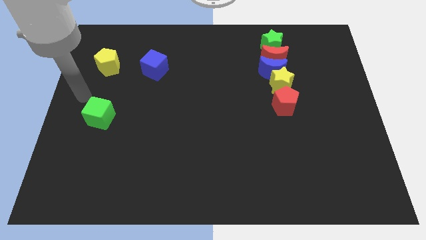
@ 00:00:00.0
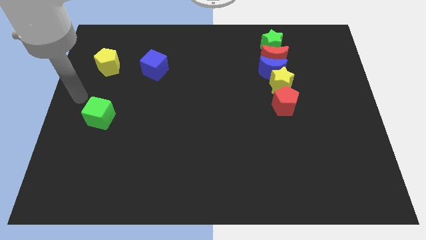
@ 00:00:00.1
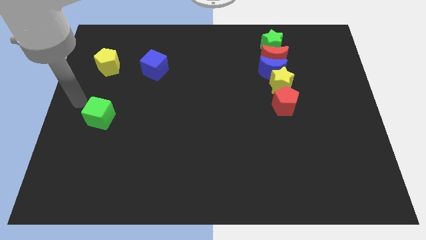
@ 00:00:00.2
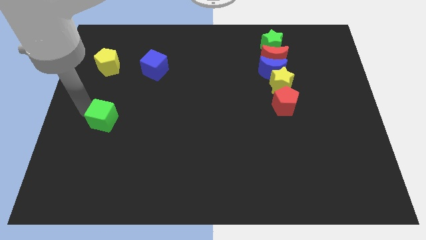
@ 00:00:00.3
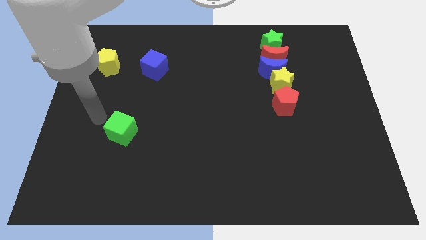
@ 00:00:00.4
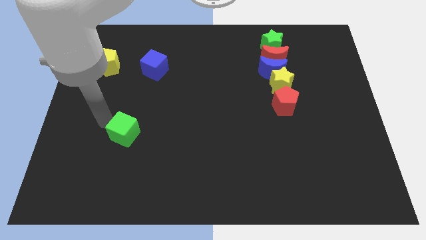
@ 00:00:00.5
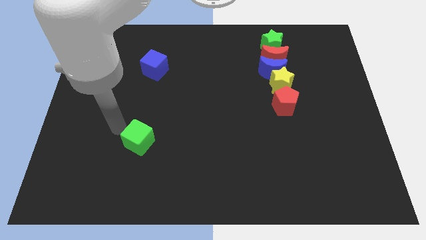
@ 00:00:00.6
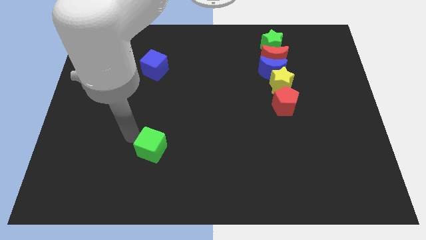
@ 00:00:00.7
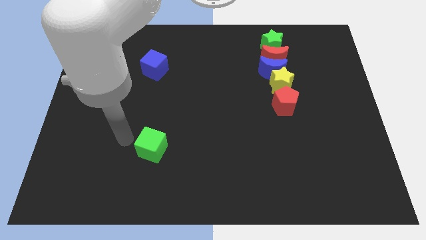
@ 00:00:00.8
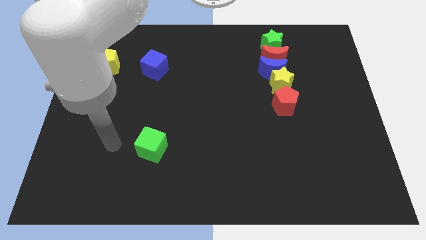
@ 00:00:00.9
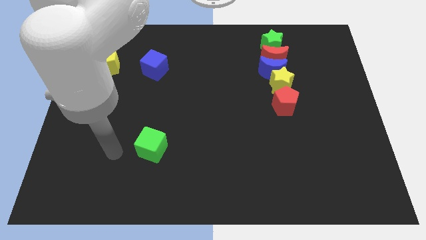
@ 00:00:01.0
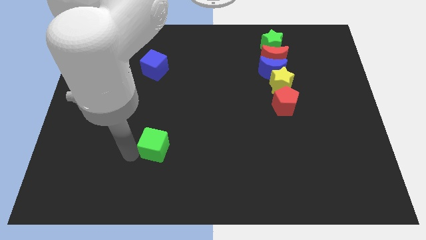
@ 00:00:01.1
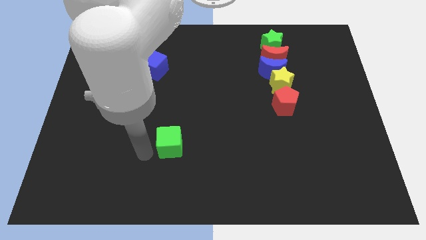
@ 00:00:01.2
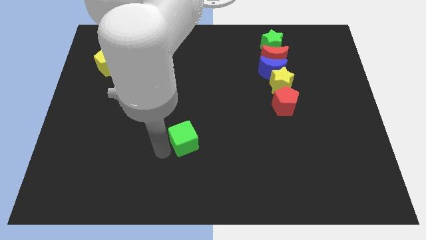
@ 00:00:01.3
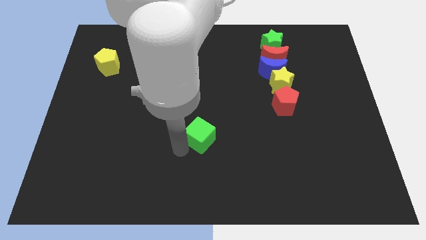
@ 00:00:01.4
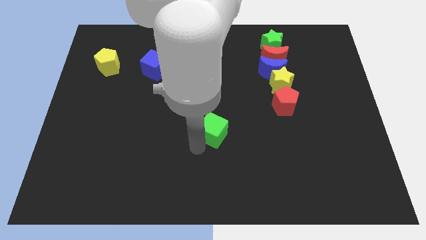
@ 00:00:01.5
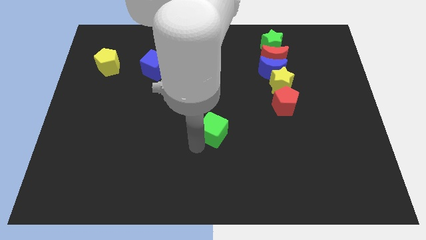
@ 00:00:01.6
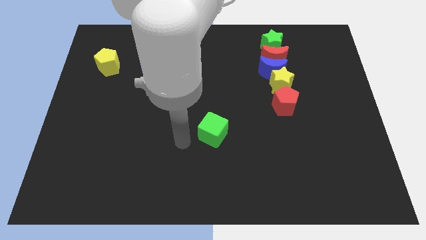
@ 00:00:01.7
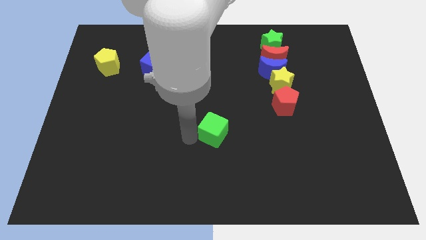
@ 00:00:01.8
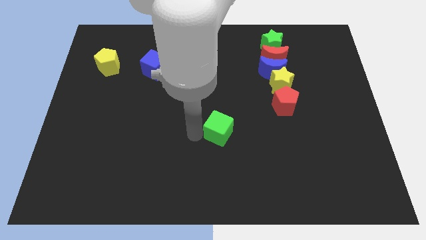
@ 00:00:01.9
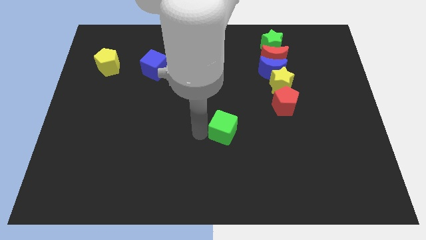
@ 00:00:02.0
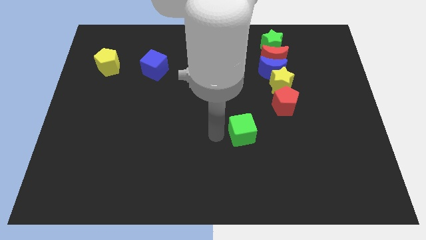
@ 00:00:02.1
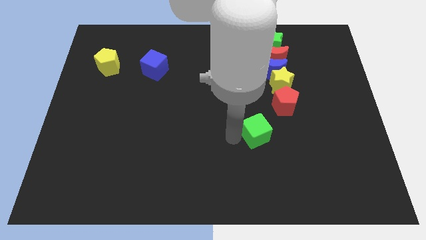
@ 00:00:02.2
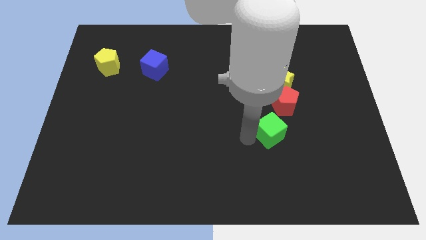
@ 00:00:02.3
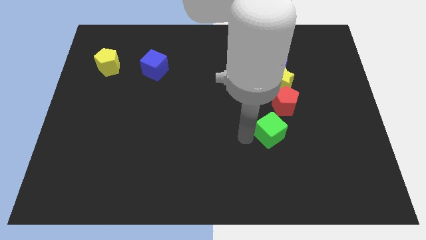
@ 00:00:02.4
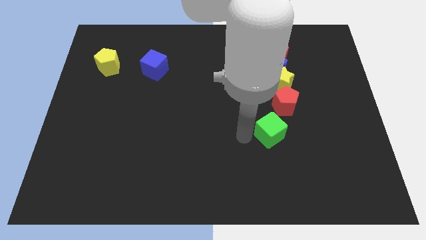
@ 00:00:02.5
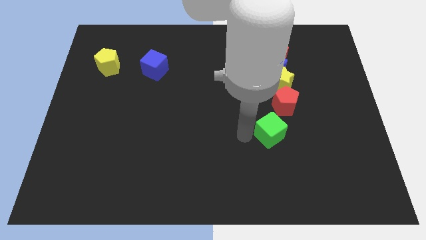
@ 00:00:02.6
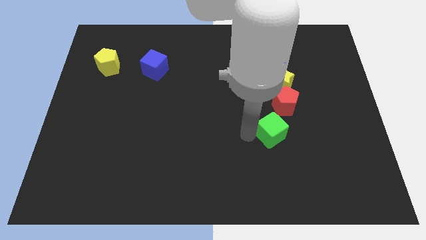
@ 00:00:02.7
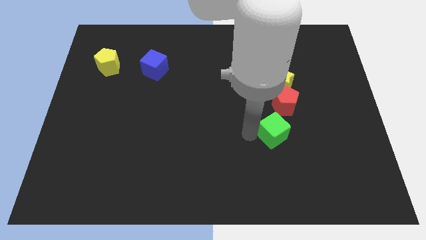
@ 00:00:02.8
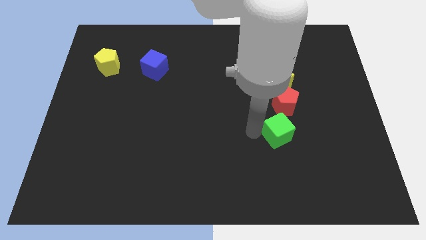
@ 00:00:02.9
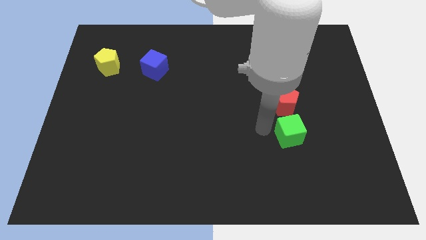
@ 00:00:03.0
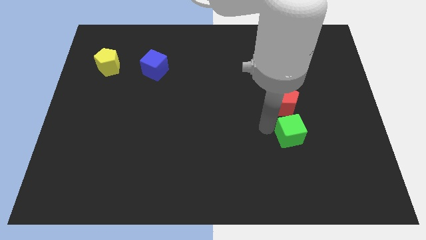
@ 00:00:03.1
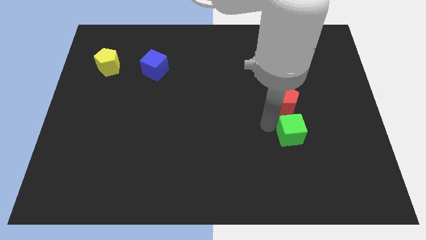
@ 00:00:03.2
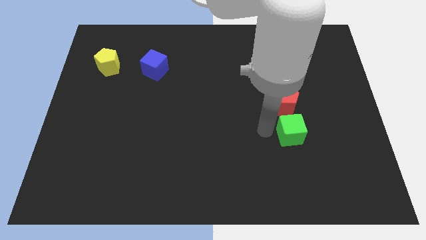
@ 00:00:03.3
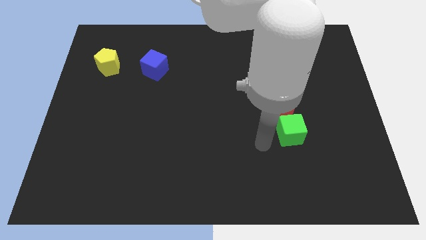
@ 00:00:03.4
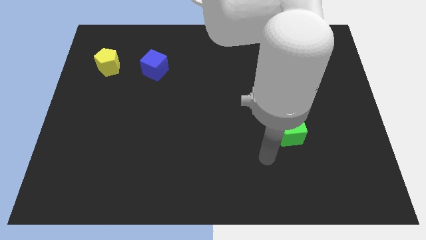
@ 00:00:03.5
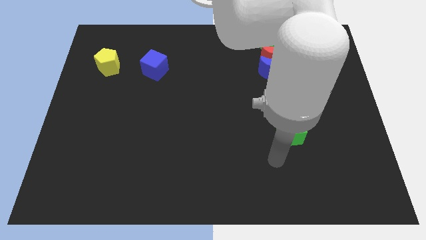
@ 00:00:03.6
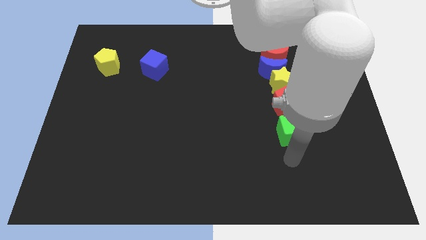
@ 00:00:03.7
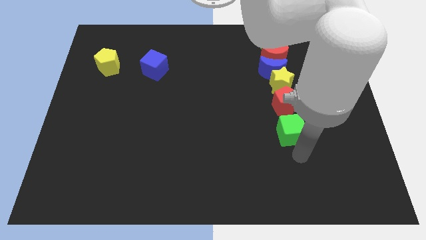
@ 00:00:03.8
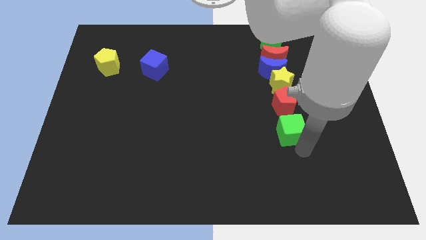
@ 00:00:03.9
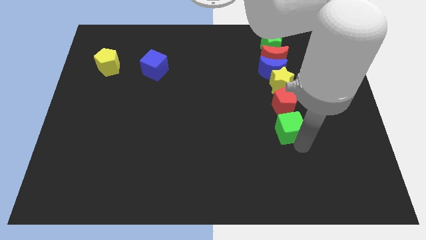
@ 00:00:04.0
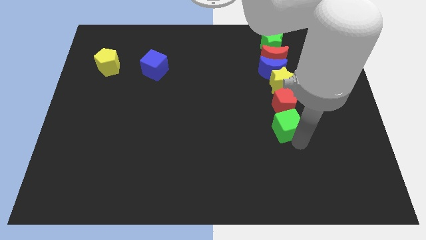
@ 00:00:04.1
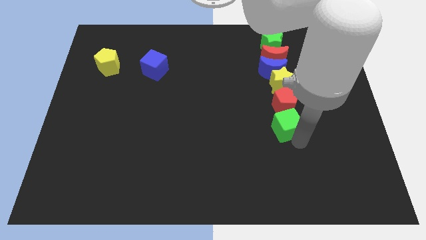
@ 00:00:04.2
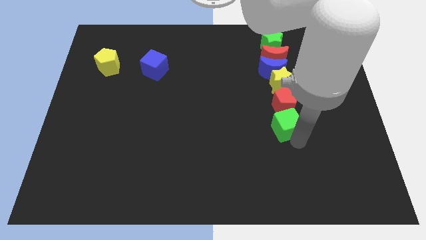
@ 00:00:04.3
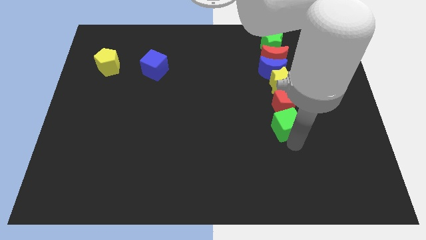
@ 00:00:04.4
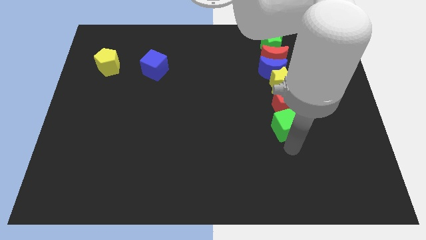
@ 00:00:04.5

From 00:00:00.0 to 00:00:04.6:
place green cube below the red pentagond

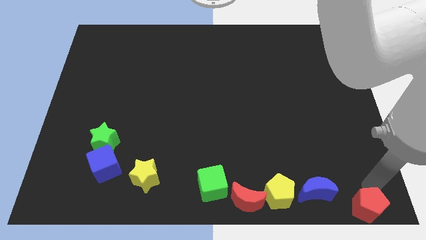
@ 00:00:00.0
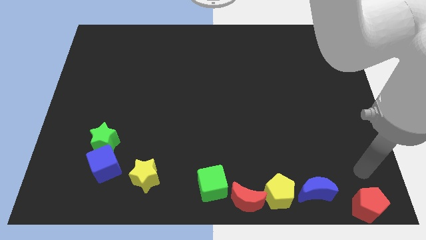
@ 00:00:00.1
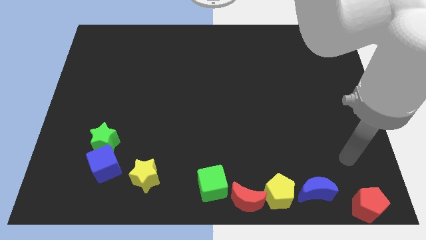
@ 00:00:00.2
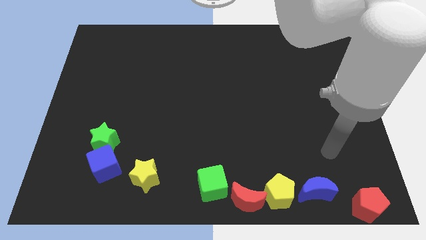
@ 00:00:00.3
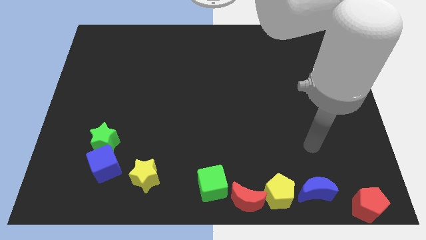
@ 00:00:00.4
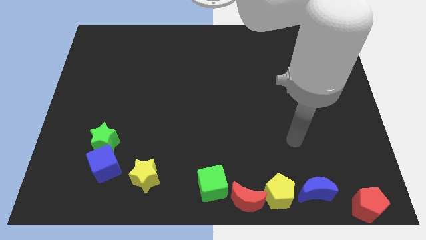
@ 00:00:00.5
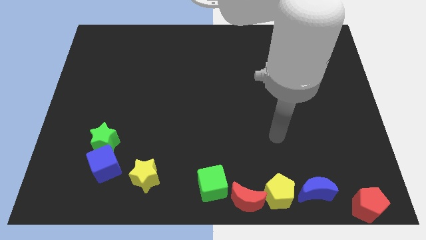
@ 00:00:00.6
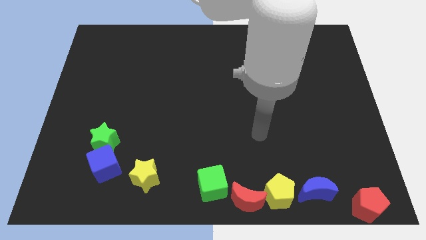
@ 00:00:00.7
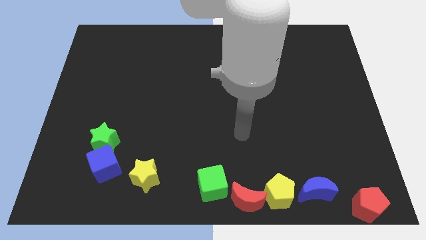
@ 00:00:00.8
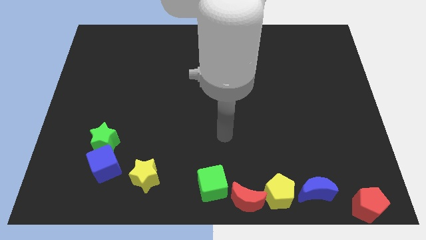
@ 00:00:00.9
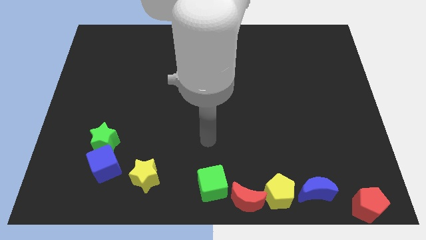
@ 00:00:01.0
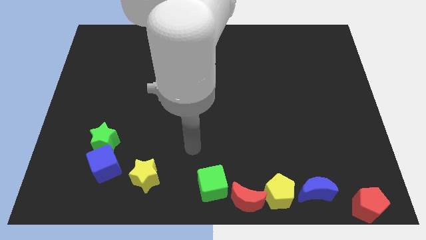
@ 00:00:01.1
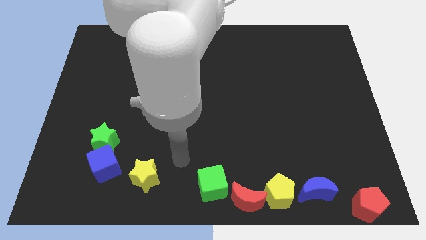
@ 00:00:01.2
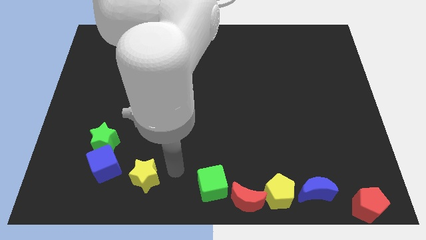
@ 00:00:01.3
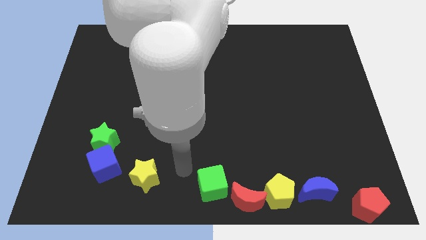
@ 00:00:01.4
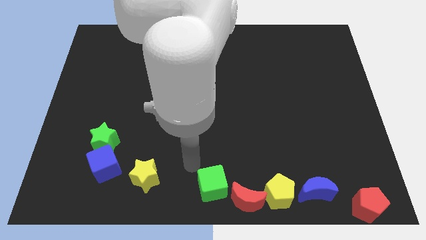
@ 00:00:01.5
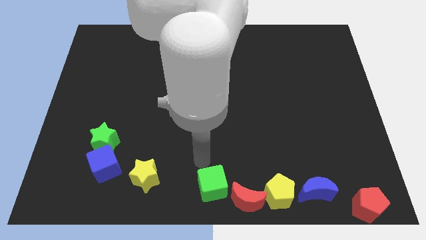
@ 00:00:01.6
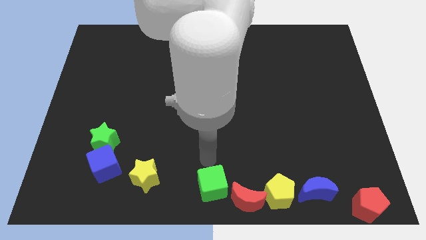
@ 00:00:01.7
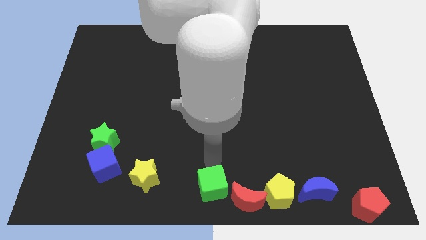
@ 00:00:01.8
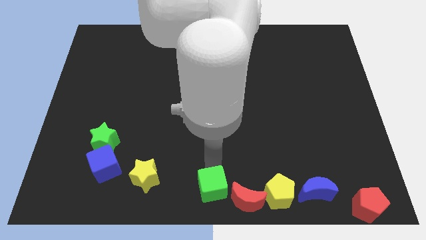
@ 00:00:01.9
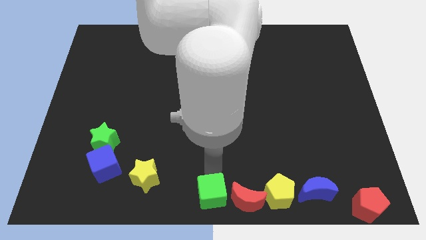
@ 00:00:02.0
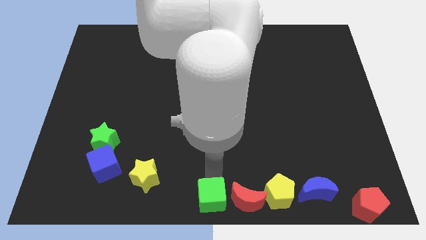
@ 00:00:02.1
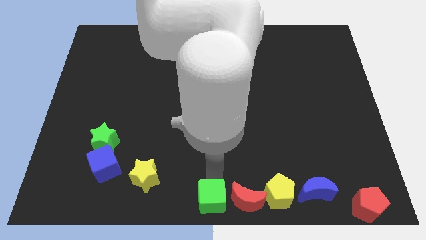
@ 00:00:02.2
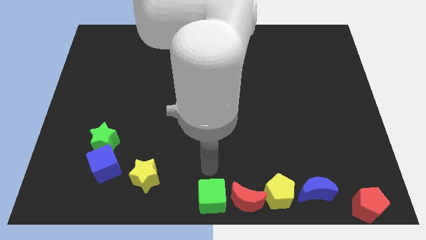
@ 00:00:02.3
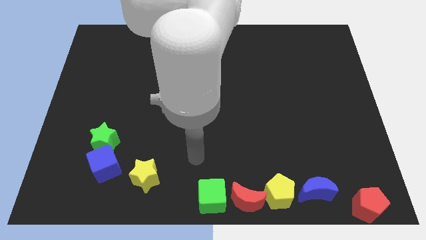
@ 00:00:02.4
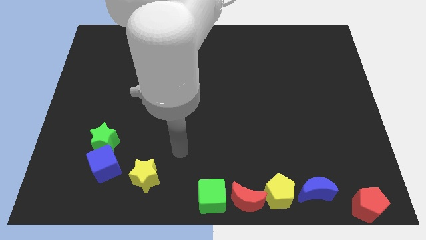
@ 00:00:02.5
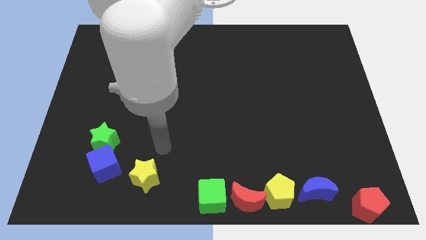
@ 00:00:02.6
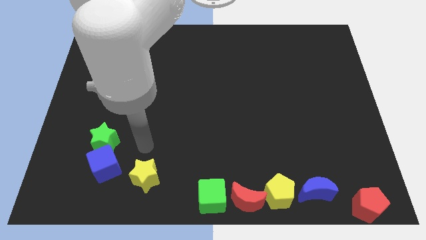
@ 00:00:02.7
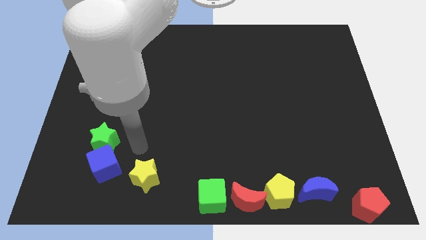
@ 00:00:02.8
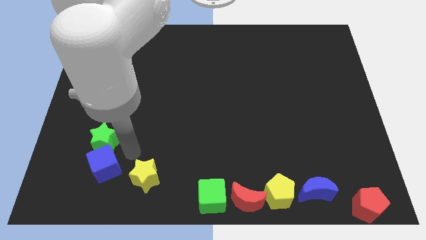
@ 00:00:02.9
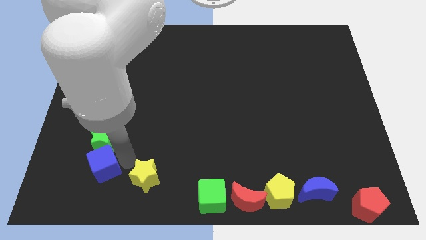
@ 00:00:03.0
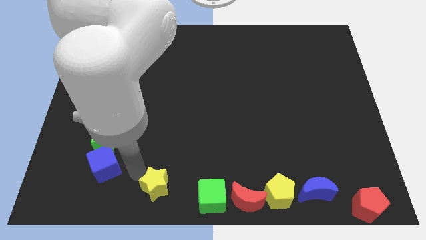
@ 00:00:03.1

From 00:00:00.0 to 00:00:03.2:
move the green cube slightly to the bottom center of the board

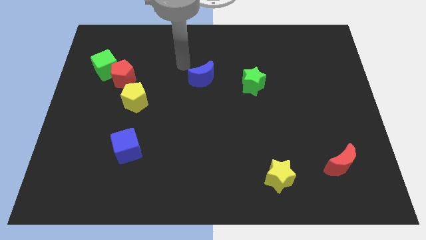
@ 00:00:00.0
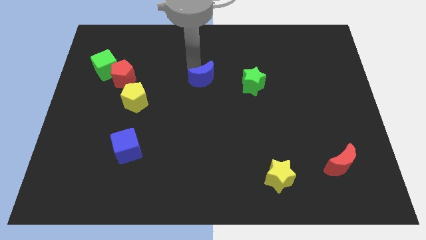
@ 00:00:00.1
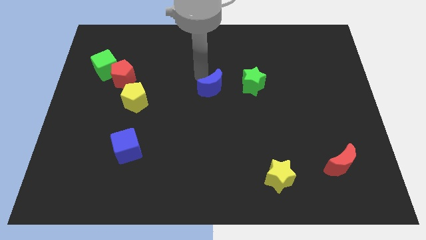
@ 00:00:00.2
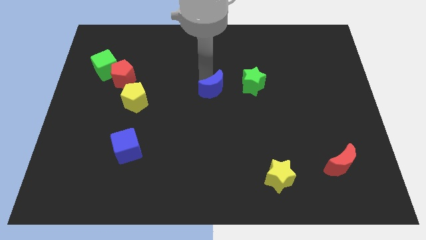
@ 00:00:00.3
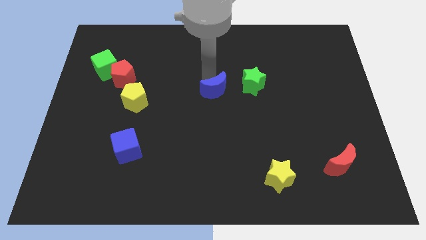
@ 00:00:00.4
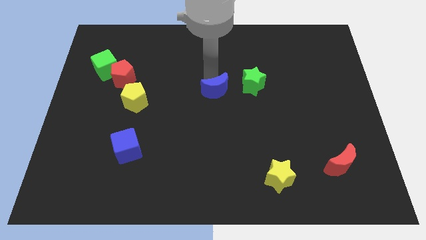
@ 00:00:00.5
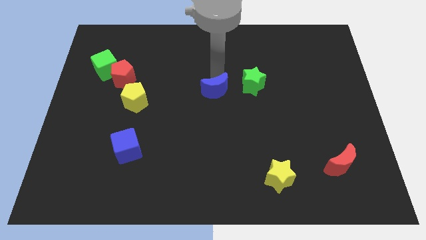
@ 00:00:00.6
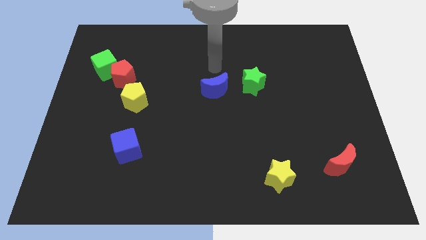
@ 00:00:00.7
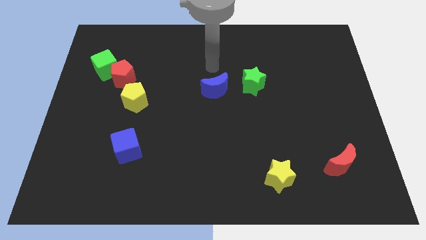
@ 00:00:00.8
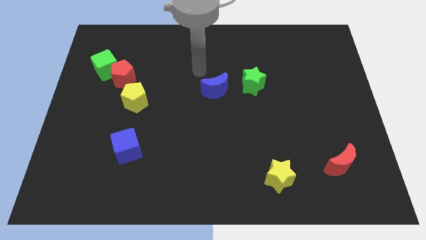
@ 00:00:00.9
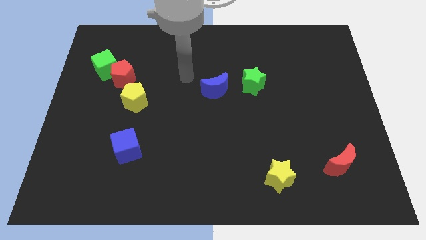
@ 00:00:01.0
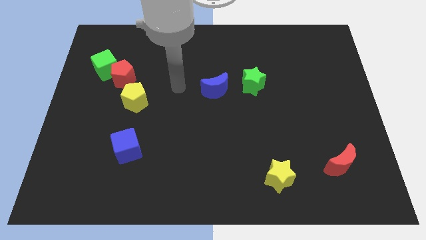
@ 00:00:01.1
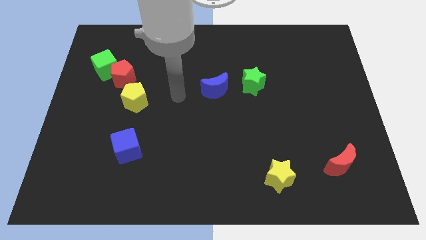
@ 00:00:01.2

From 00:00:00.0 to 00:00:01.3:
place the blue moon to the left of the green star
